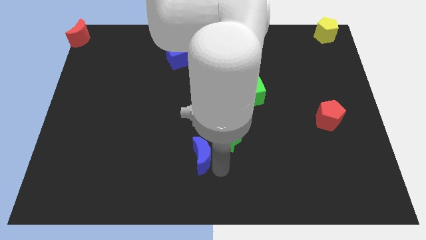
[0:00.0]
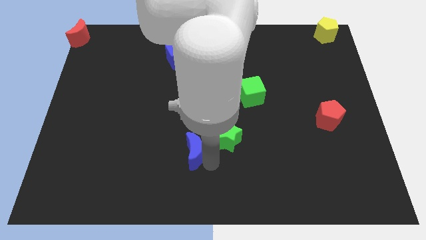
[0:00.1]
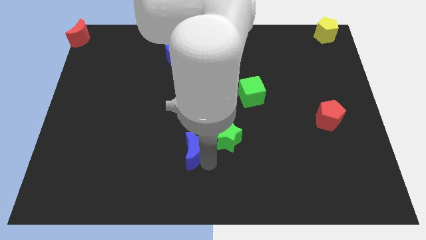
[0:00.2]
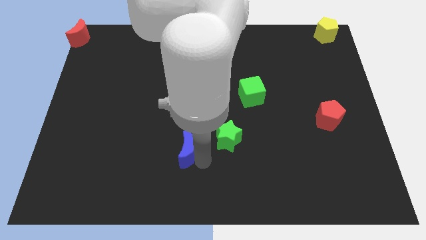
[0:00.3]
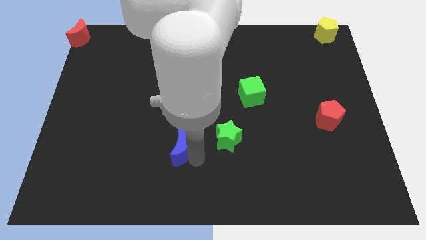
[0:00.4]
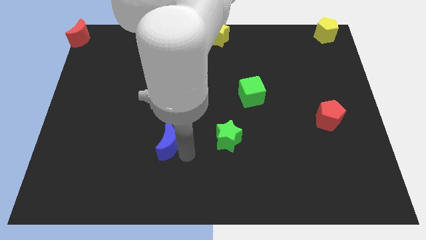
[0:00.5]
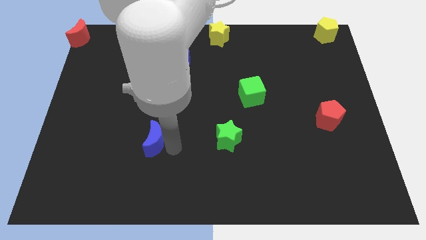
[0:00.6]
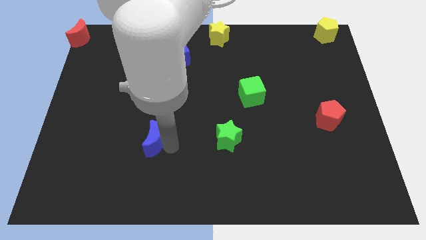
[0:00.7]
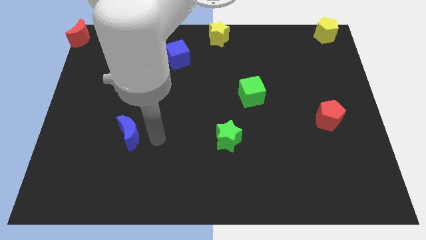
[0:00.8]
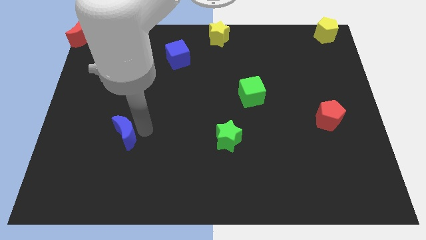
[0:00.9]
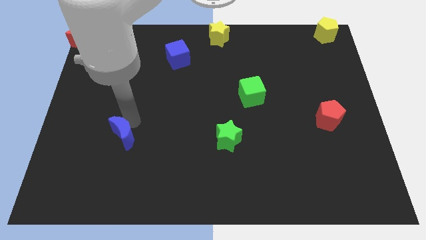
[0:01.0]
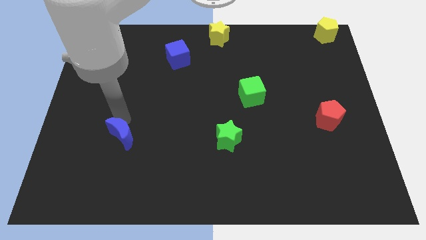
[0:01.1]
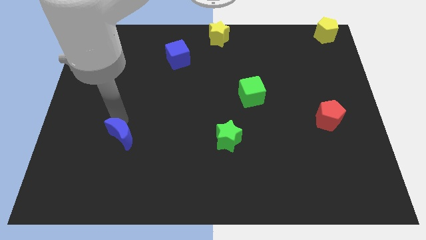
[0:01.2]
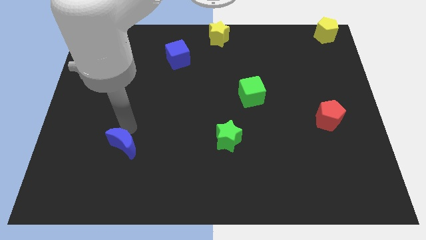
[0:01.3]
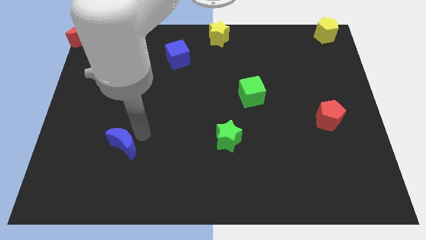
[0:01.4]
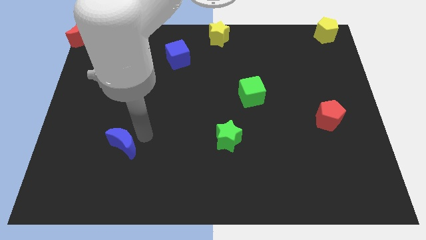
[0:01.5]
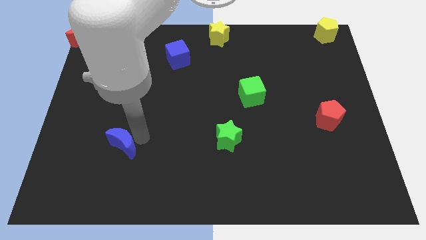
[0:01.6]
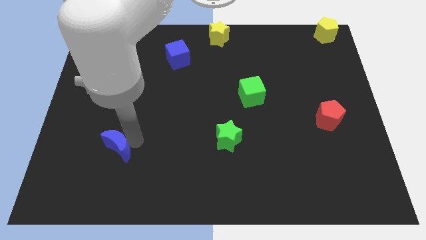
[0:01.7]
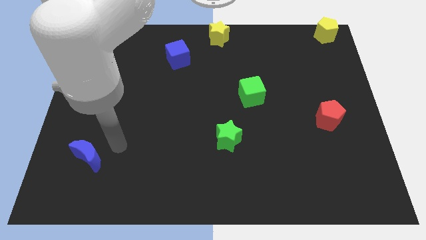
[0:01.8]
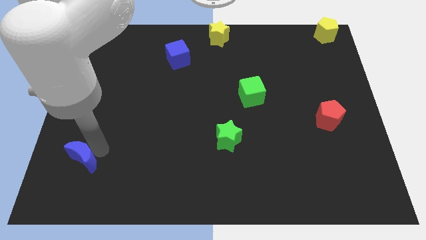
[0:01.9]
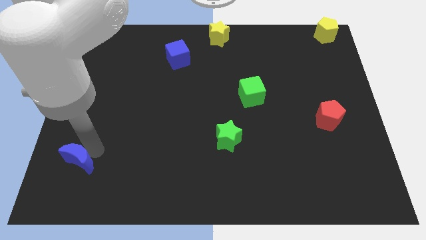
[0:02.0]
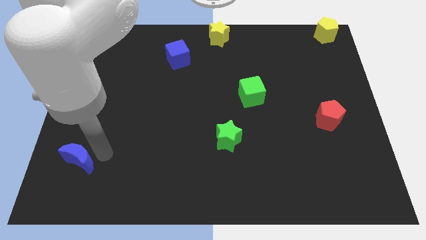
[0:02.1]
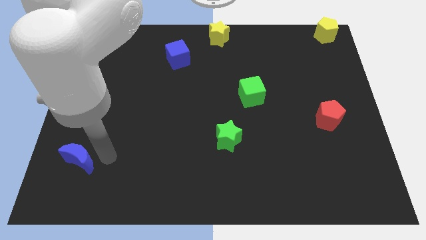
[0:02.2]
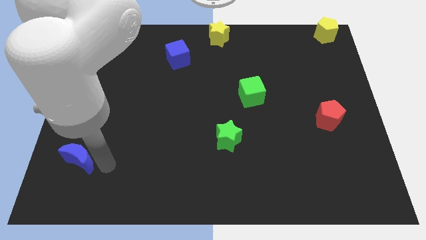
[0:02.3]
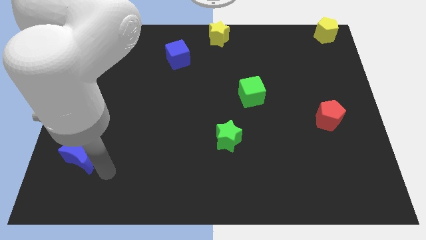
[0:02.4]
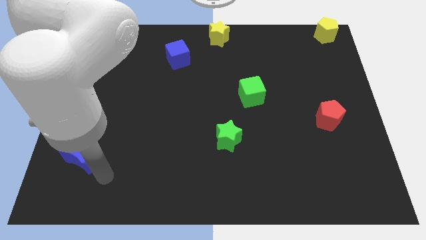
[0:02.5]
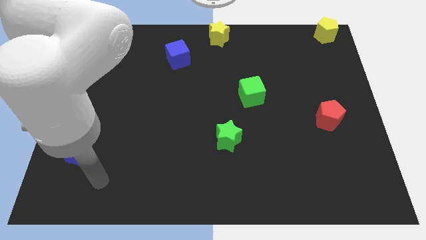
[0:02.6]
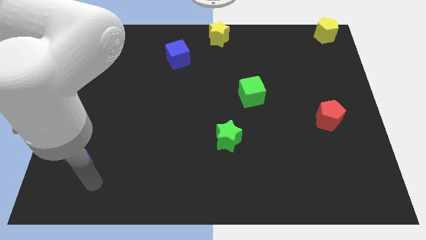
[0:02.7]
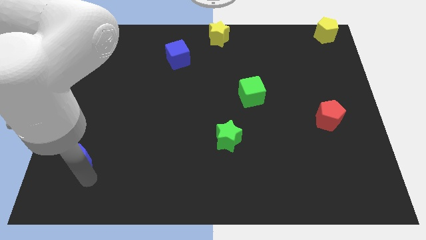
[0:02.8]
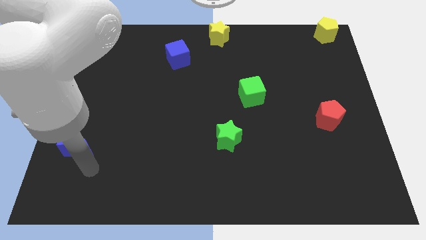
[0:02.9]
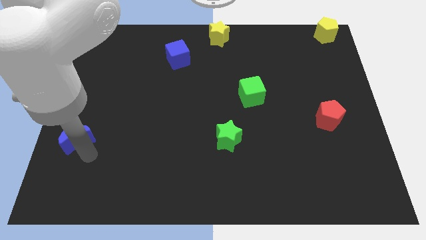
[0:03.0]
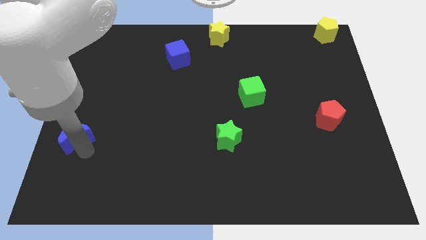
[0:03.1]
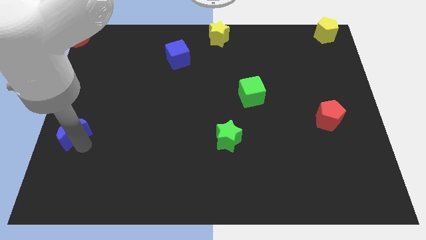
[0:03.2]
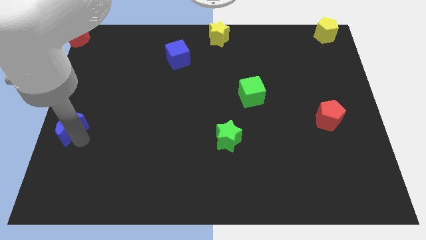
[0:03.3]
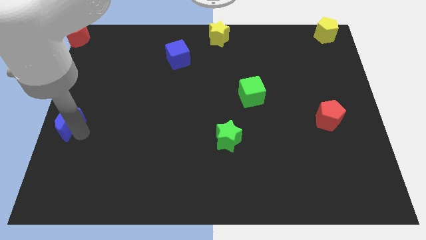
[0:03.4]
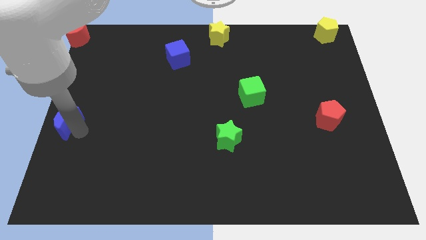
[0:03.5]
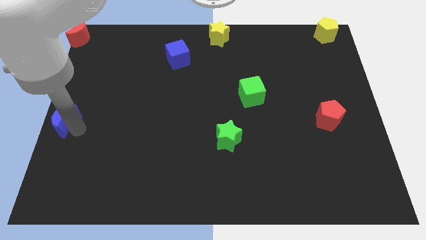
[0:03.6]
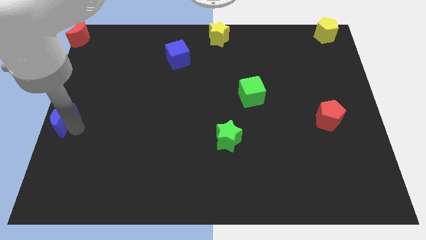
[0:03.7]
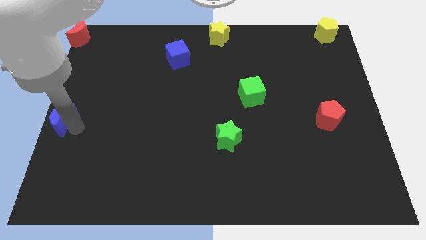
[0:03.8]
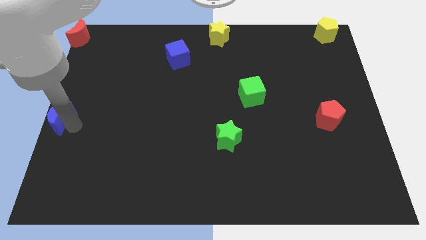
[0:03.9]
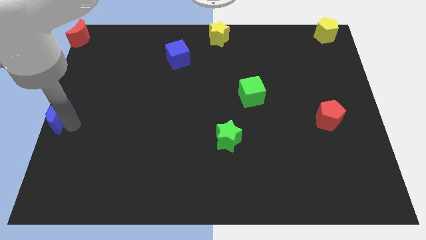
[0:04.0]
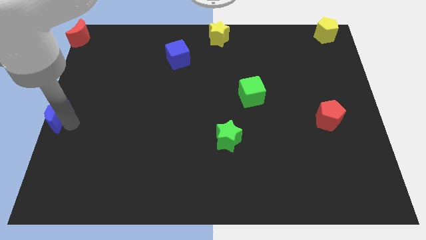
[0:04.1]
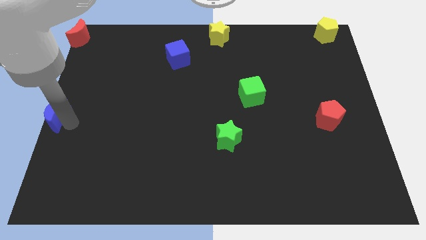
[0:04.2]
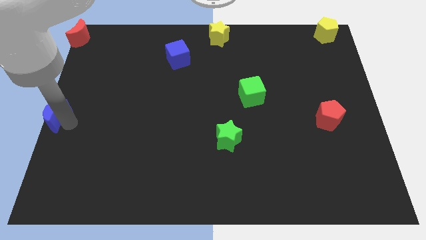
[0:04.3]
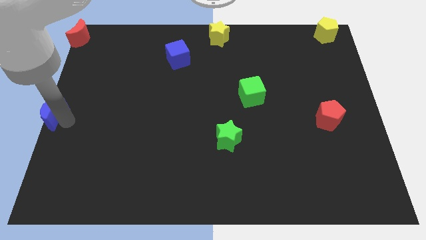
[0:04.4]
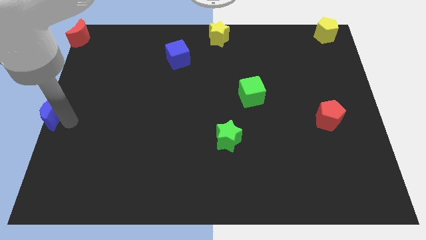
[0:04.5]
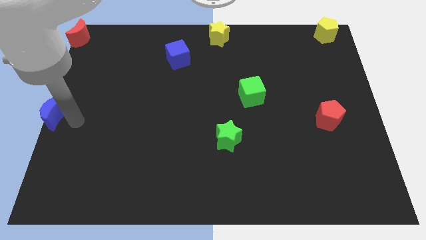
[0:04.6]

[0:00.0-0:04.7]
put the blue crescent to the left center of the board

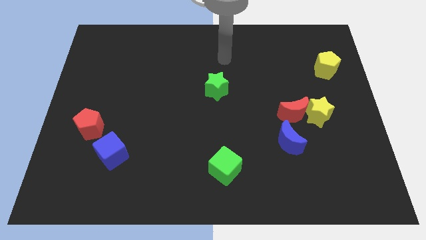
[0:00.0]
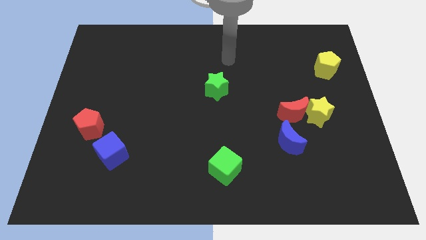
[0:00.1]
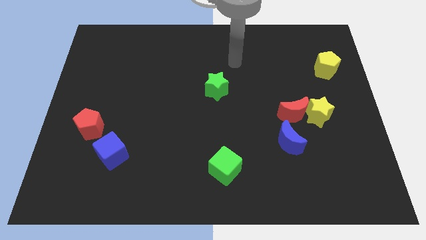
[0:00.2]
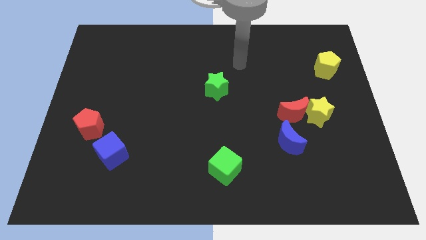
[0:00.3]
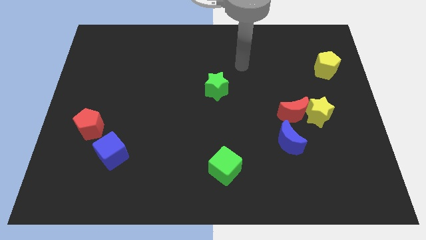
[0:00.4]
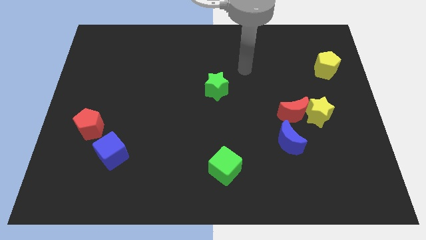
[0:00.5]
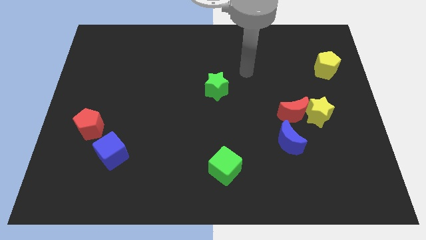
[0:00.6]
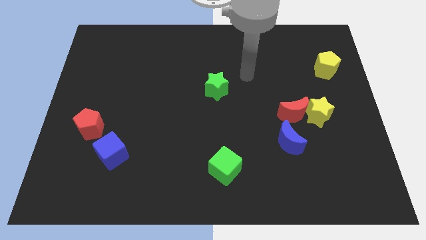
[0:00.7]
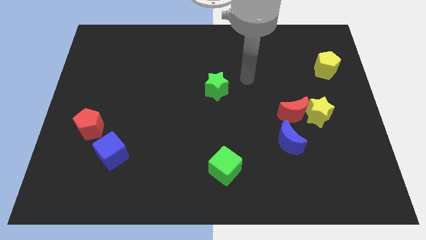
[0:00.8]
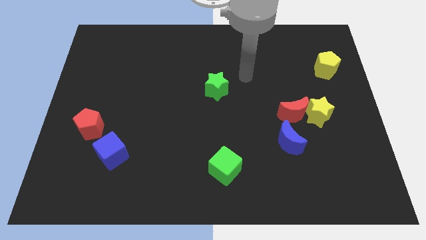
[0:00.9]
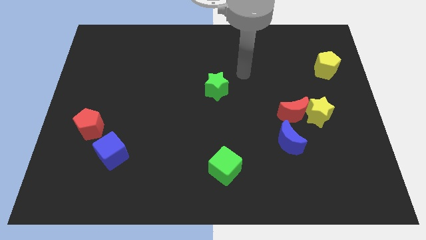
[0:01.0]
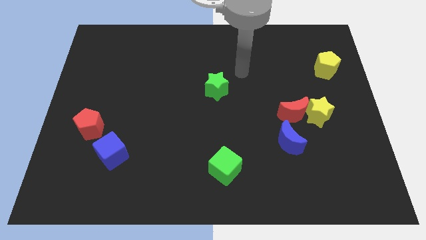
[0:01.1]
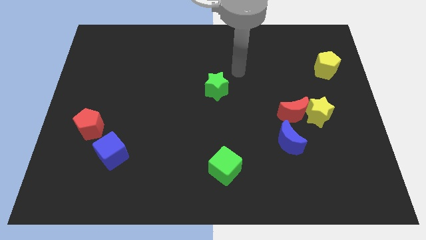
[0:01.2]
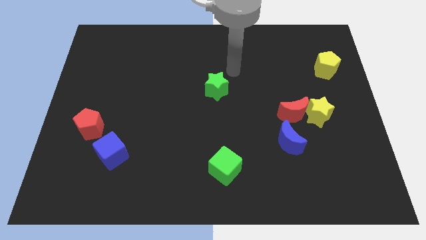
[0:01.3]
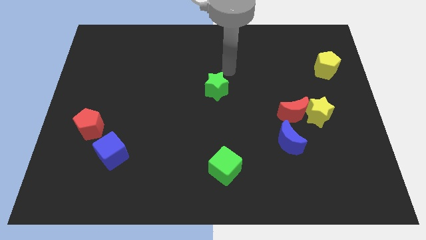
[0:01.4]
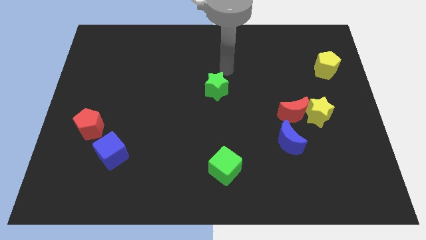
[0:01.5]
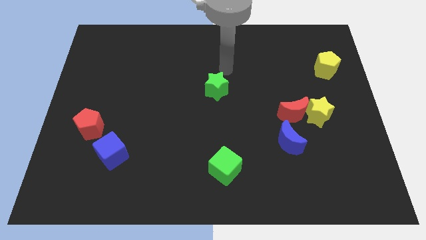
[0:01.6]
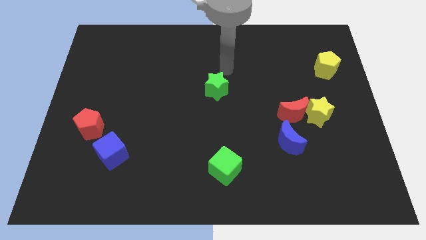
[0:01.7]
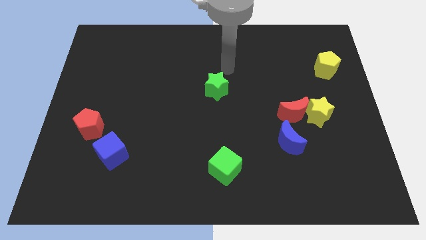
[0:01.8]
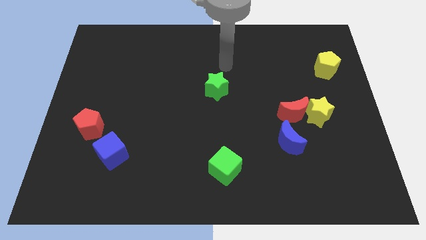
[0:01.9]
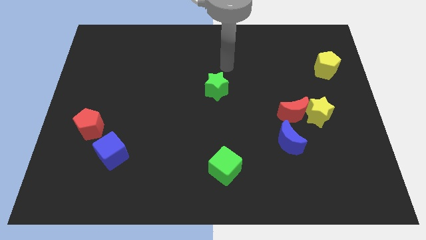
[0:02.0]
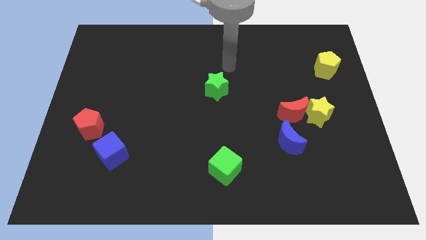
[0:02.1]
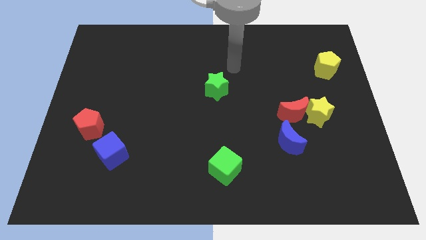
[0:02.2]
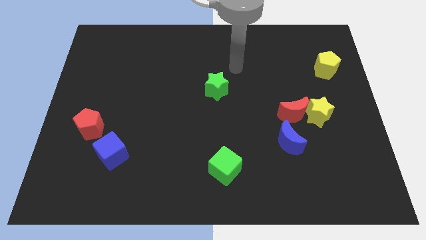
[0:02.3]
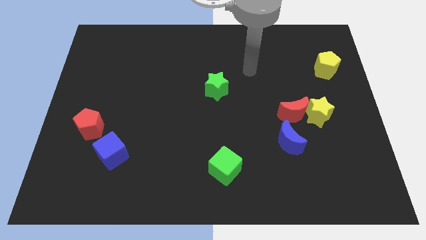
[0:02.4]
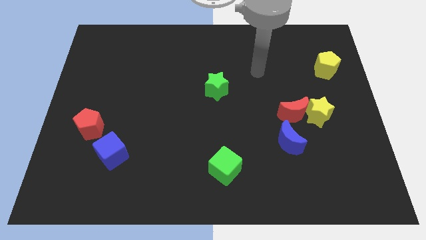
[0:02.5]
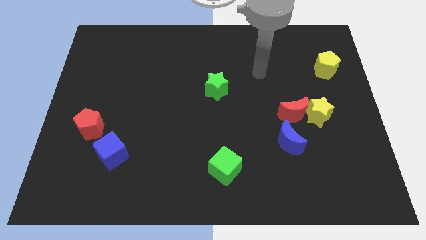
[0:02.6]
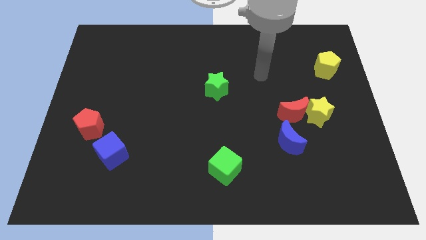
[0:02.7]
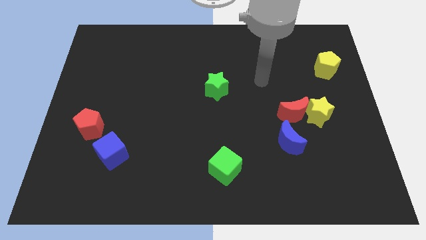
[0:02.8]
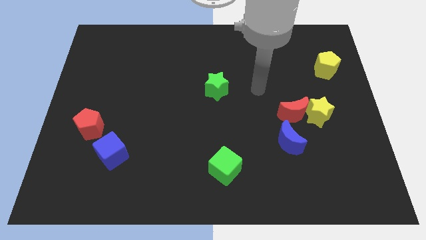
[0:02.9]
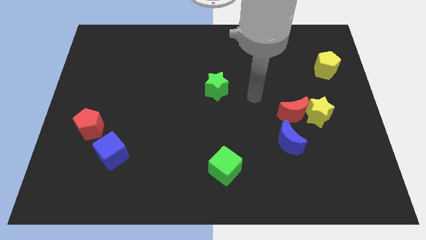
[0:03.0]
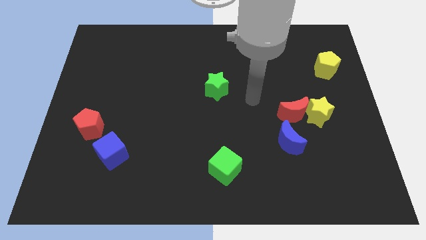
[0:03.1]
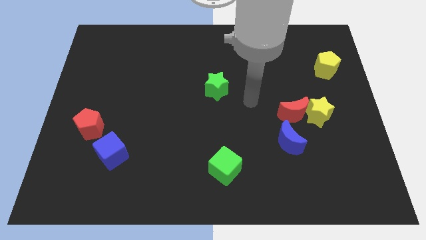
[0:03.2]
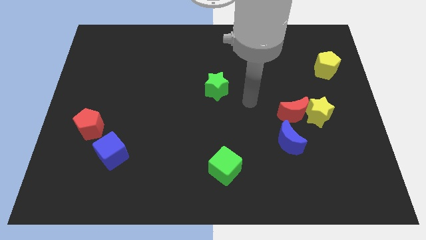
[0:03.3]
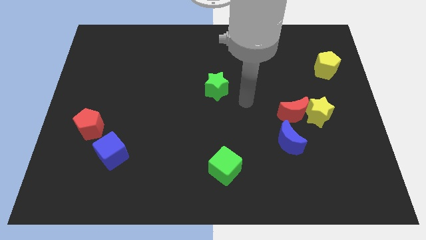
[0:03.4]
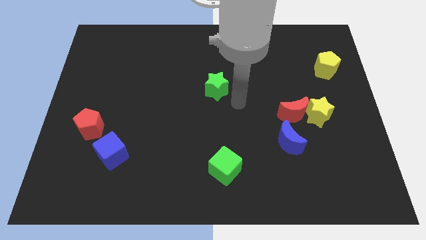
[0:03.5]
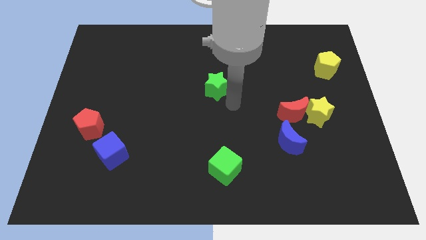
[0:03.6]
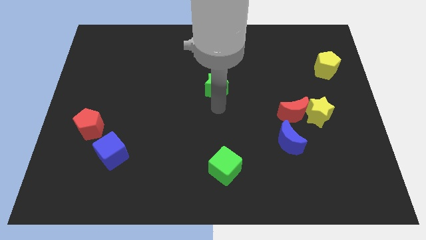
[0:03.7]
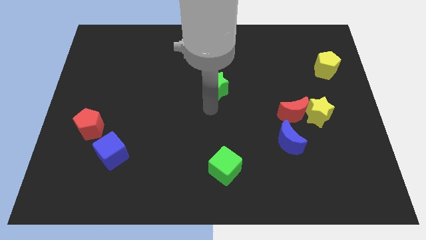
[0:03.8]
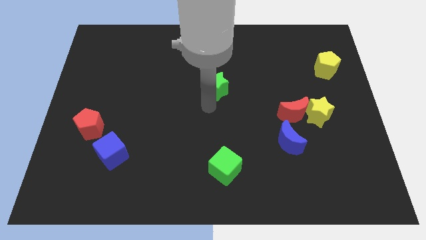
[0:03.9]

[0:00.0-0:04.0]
move your arm below the green star

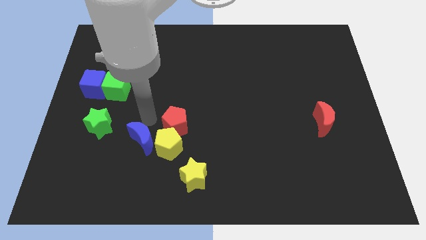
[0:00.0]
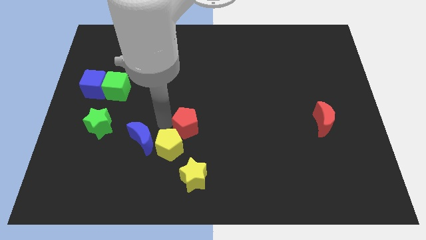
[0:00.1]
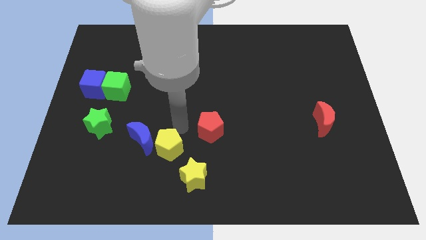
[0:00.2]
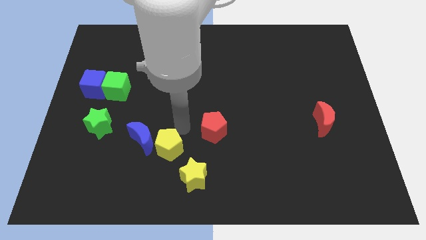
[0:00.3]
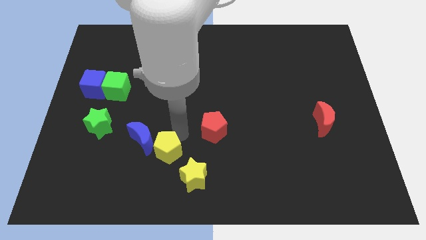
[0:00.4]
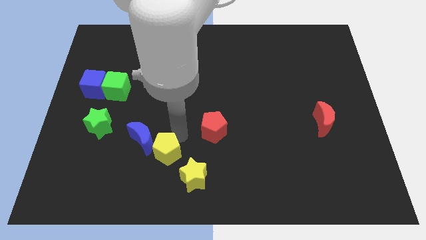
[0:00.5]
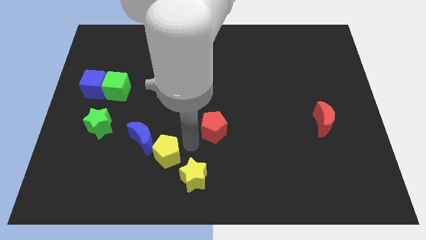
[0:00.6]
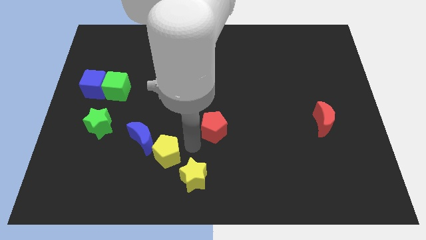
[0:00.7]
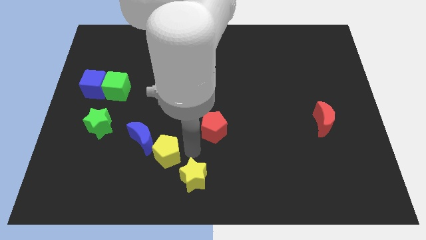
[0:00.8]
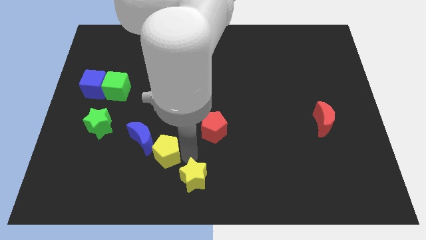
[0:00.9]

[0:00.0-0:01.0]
separate the pentagons
